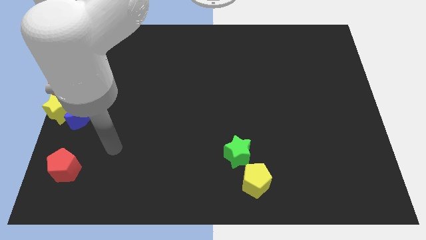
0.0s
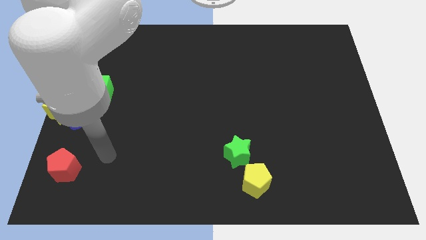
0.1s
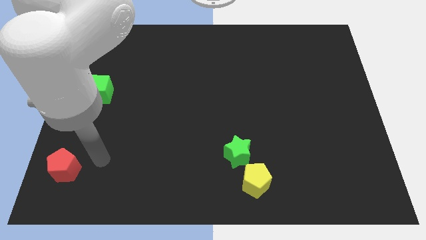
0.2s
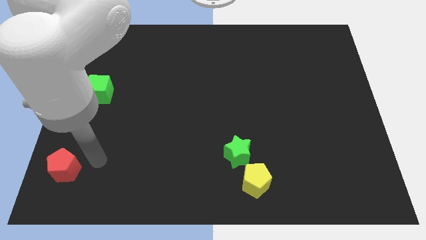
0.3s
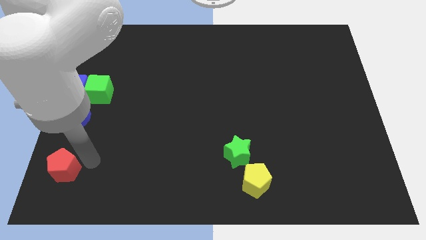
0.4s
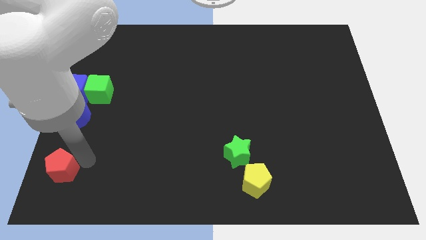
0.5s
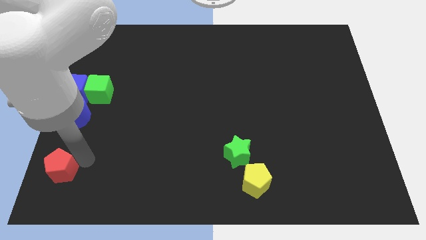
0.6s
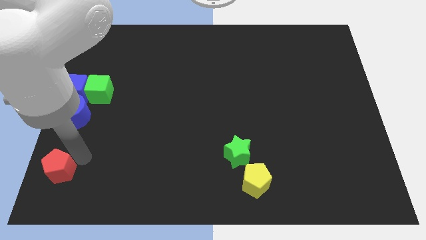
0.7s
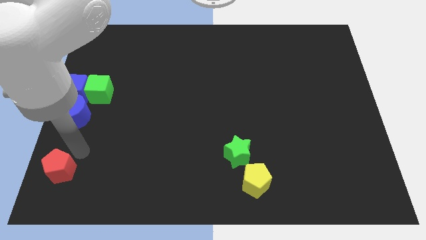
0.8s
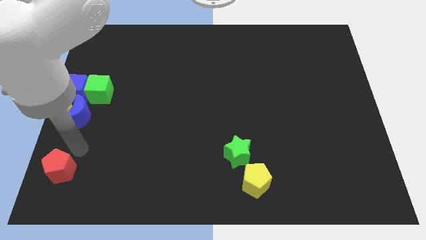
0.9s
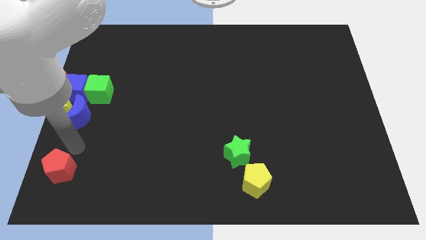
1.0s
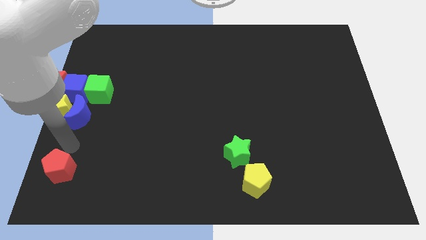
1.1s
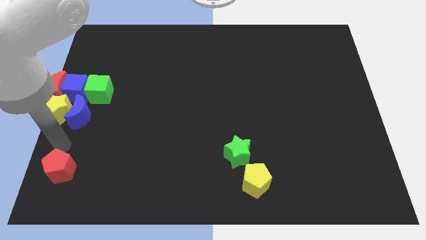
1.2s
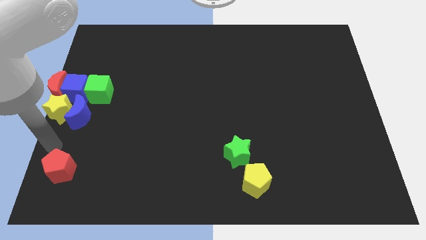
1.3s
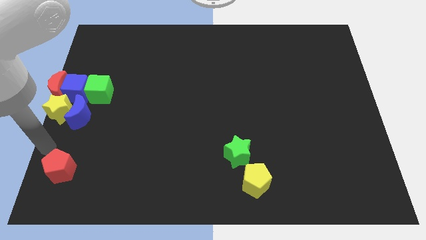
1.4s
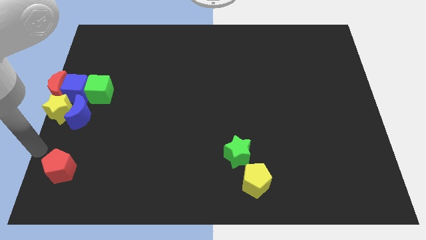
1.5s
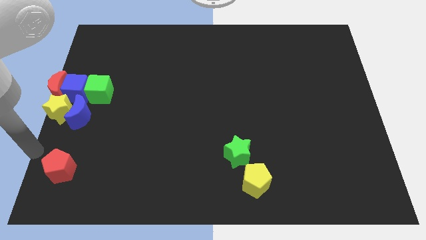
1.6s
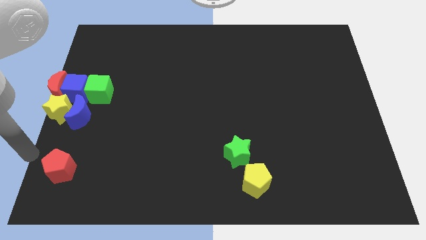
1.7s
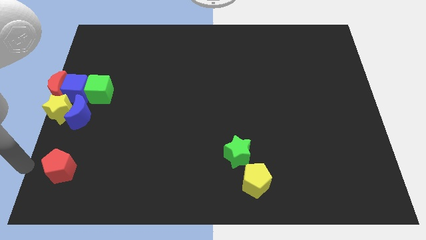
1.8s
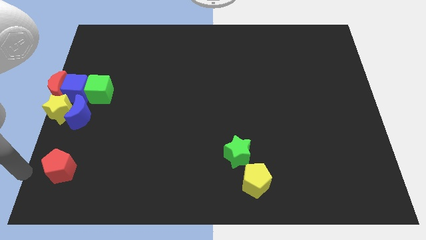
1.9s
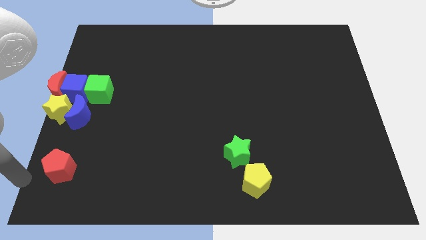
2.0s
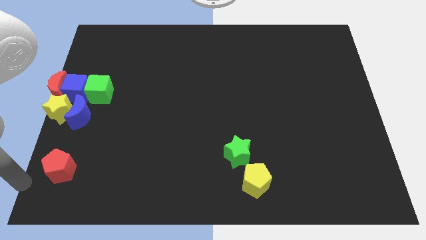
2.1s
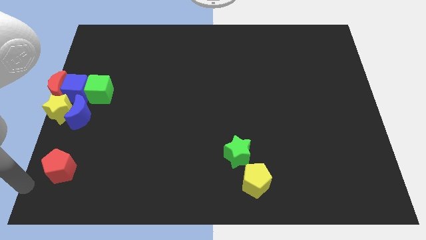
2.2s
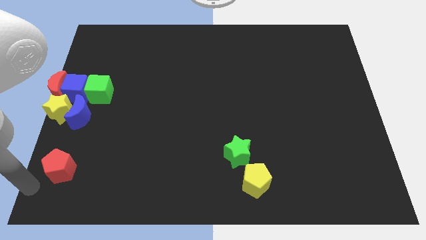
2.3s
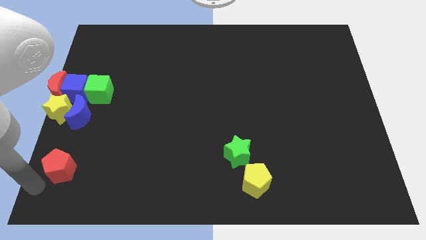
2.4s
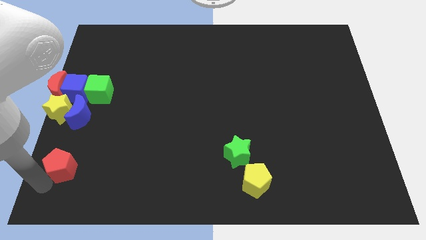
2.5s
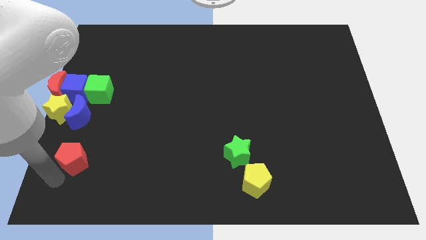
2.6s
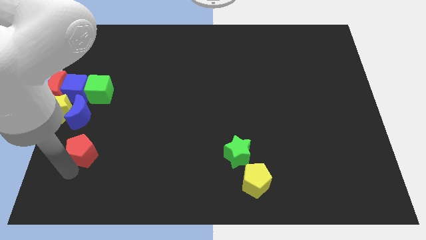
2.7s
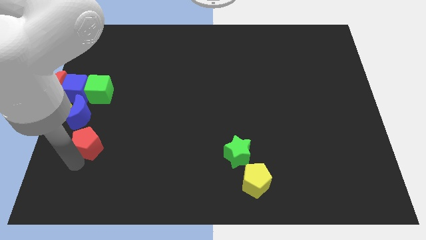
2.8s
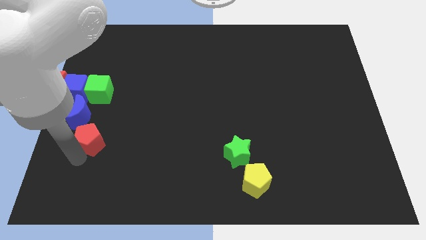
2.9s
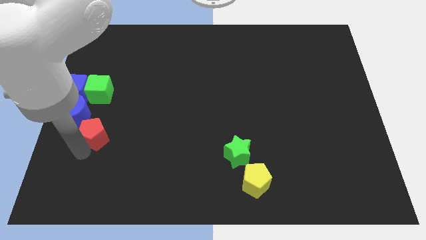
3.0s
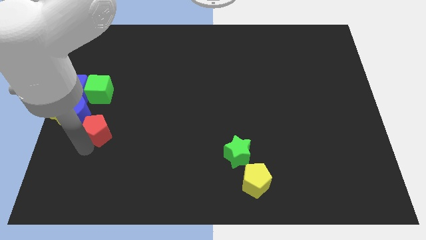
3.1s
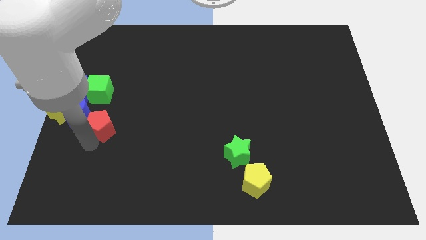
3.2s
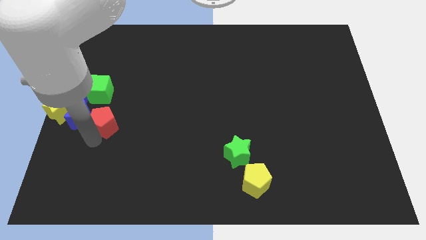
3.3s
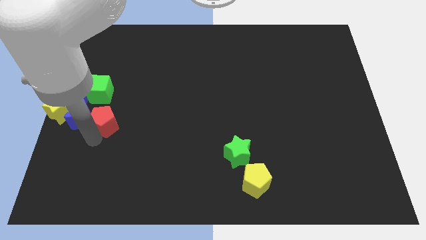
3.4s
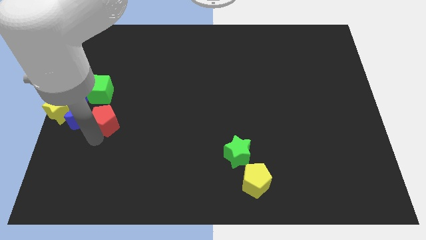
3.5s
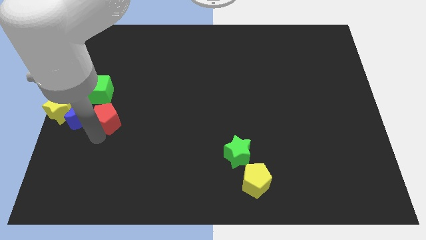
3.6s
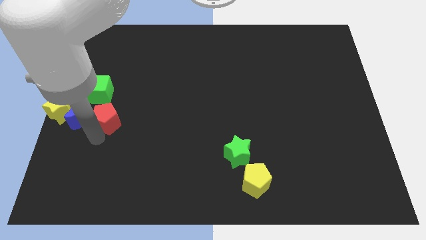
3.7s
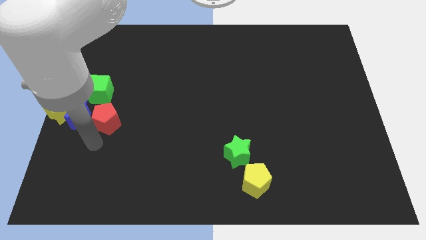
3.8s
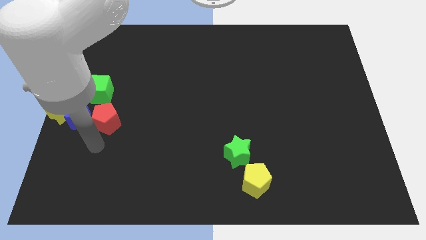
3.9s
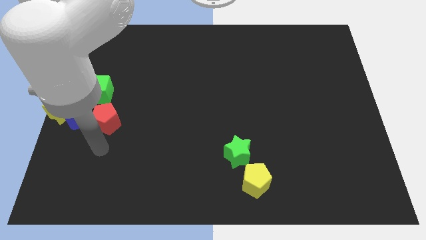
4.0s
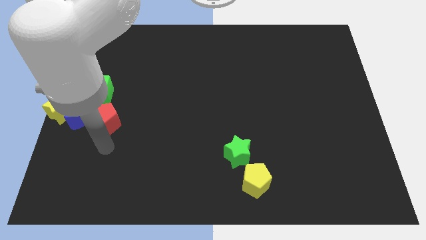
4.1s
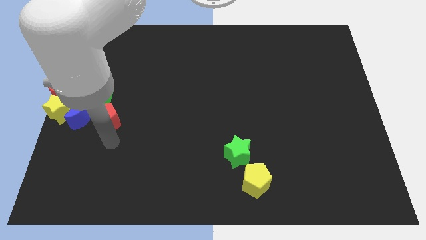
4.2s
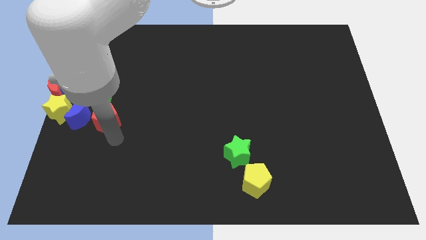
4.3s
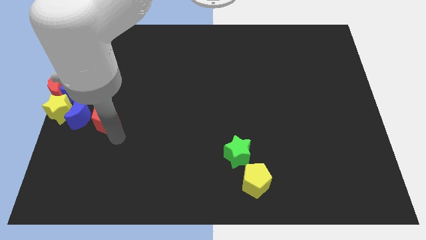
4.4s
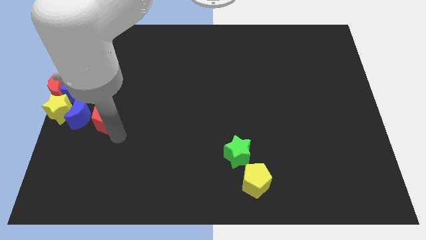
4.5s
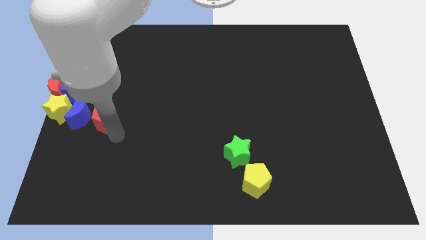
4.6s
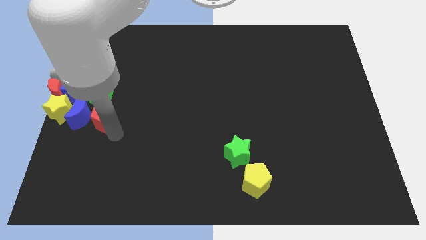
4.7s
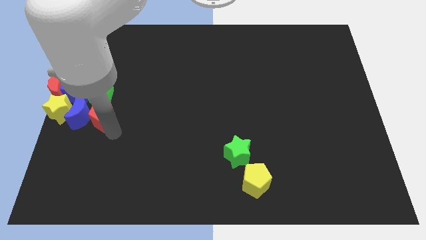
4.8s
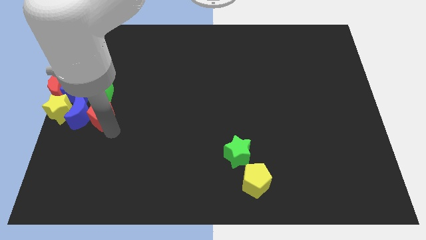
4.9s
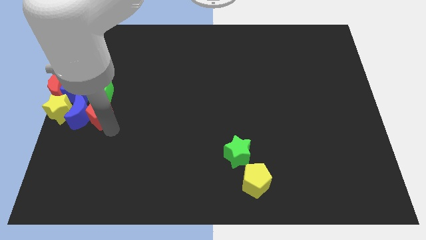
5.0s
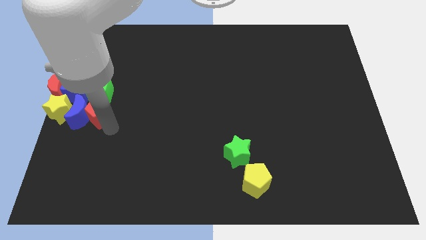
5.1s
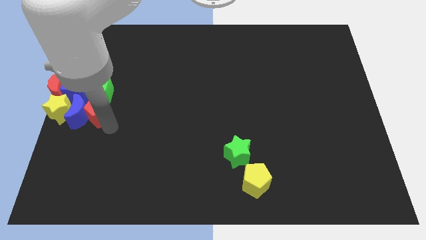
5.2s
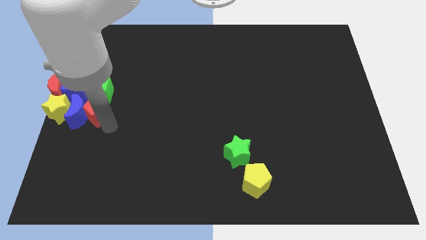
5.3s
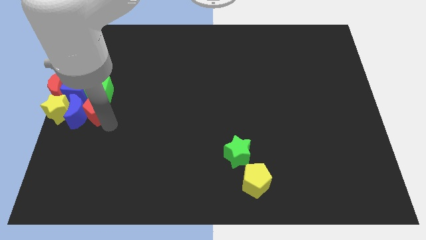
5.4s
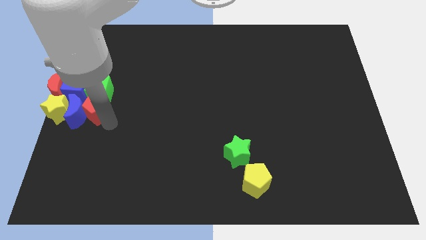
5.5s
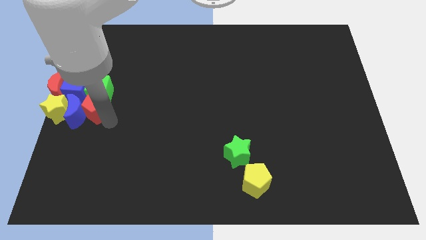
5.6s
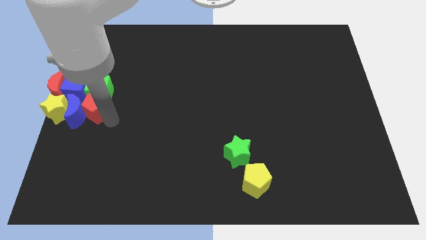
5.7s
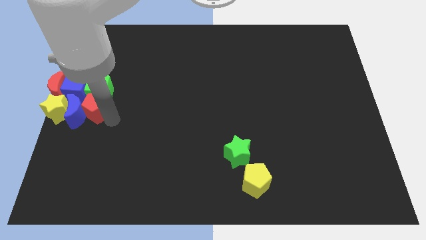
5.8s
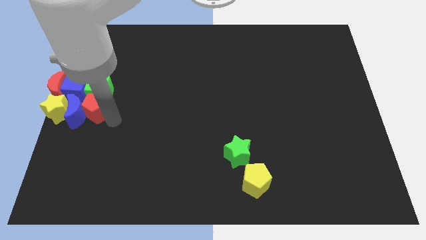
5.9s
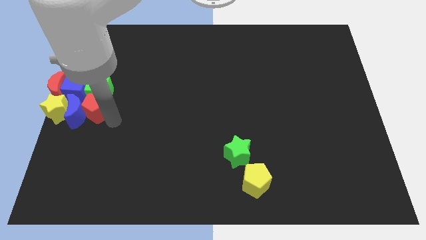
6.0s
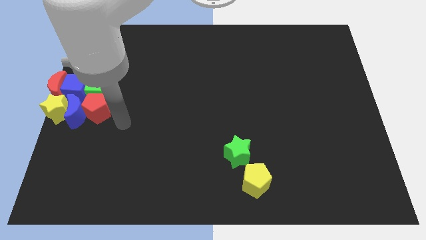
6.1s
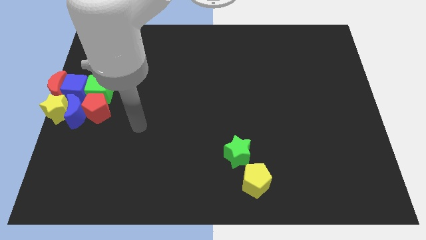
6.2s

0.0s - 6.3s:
move the red pentagon into the blue moon

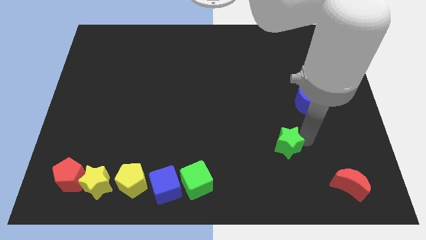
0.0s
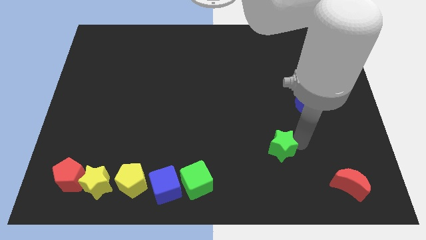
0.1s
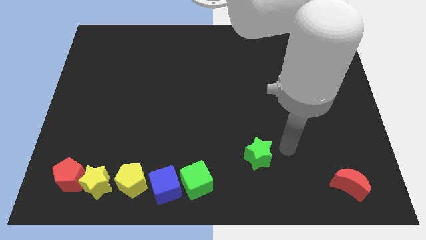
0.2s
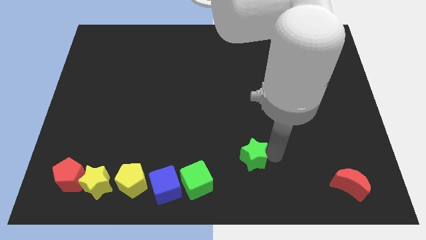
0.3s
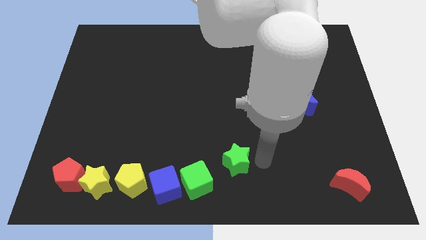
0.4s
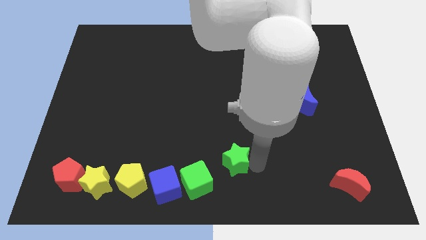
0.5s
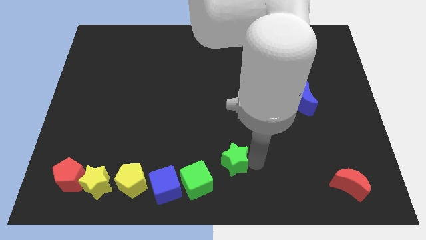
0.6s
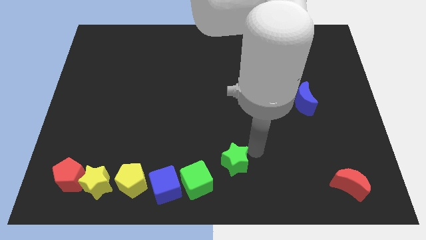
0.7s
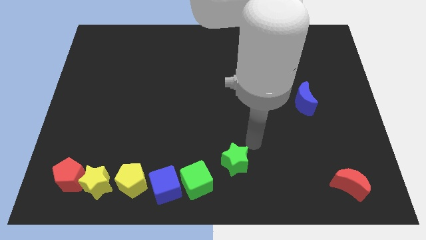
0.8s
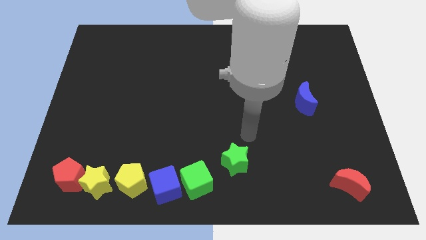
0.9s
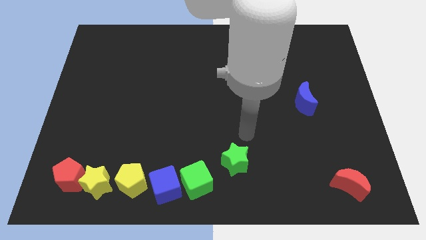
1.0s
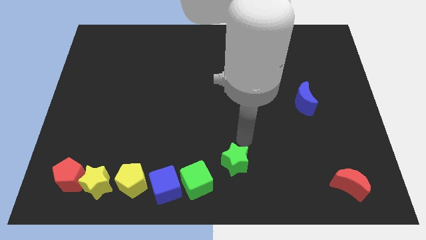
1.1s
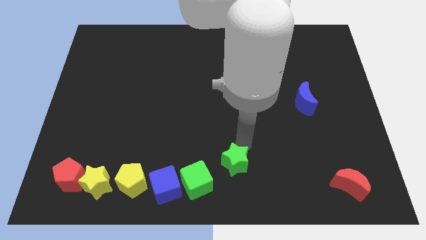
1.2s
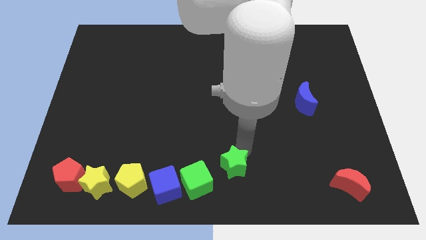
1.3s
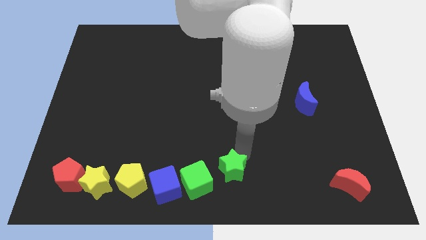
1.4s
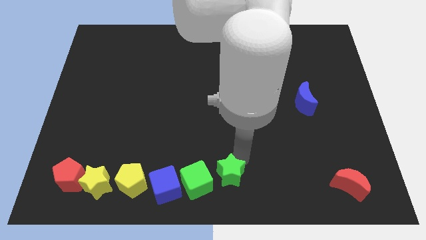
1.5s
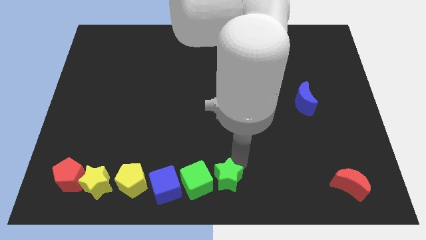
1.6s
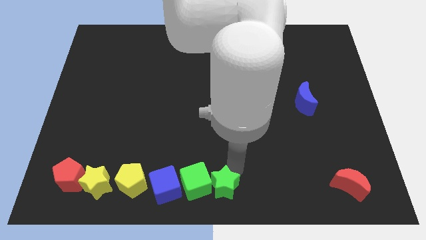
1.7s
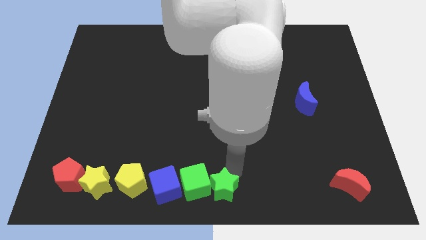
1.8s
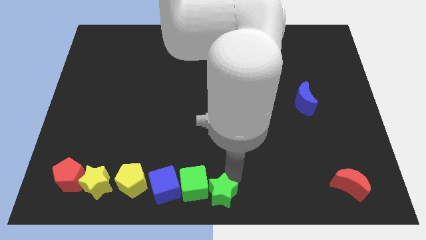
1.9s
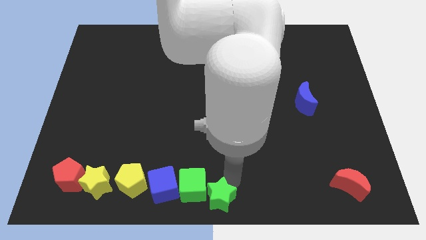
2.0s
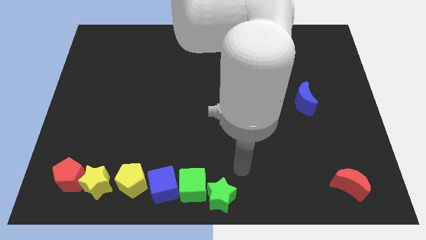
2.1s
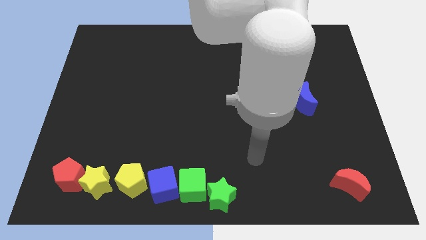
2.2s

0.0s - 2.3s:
place the green star to the right of green cube

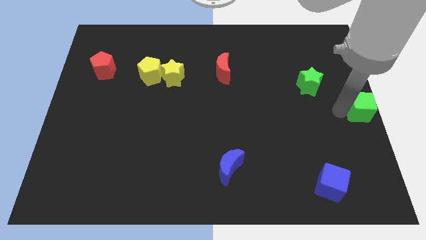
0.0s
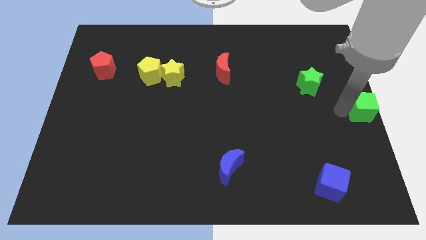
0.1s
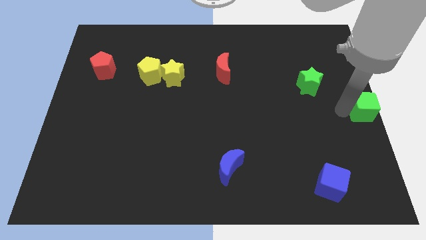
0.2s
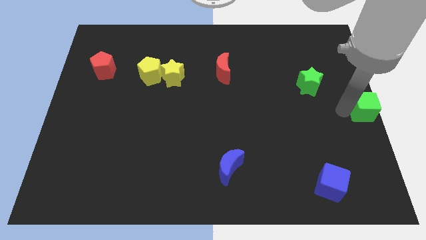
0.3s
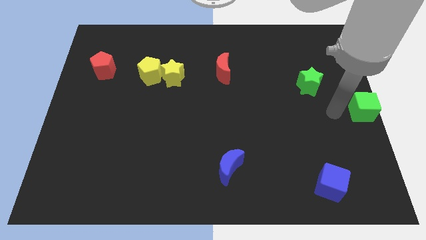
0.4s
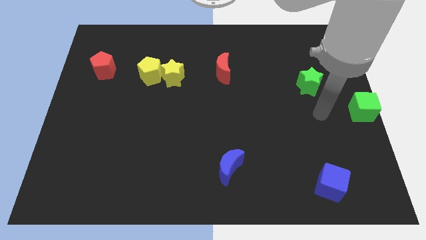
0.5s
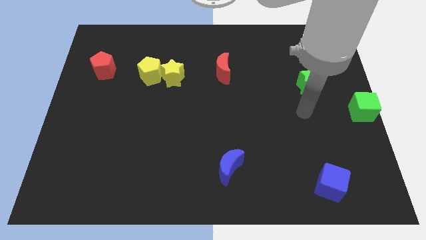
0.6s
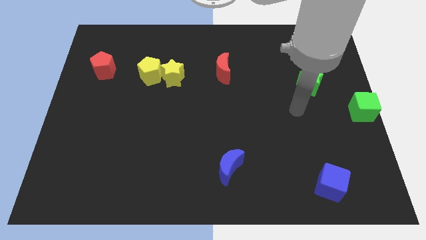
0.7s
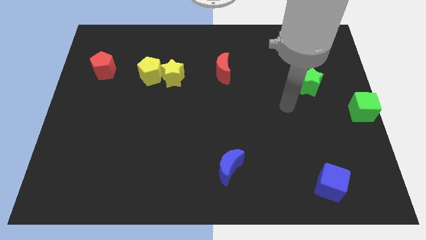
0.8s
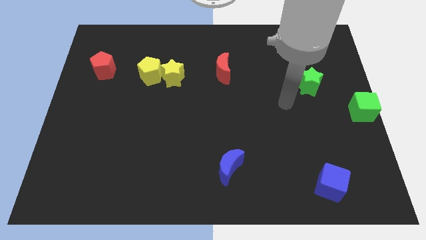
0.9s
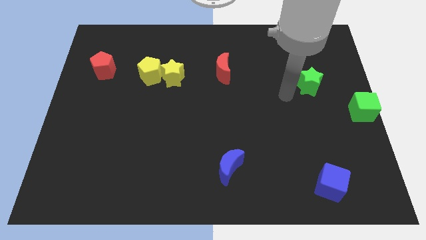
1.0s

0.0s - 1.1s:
slightly push the green cube
